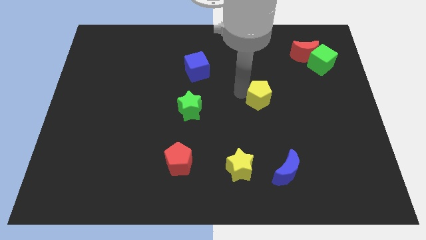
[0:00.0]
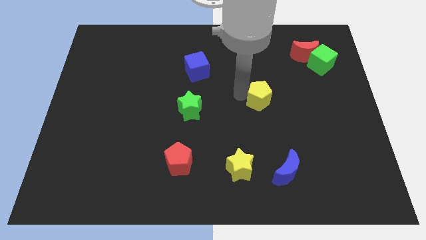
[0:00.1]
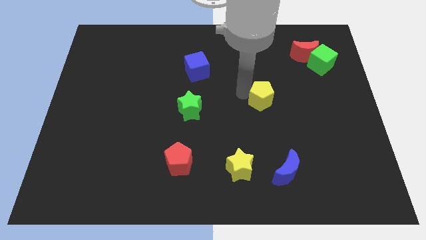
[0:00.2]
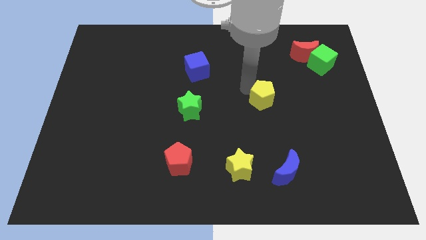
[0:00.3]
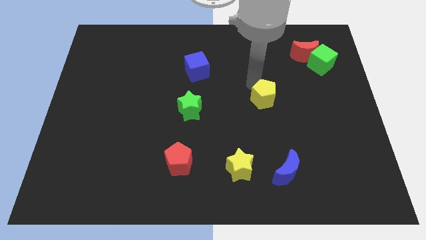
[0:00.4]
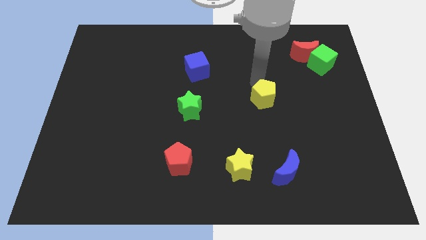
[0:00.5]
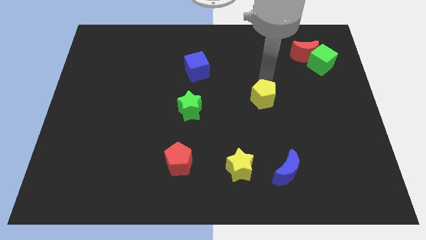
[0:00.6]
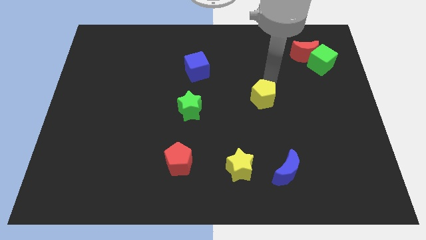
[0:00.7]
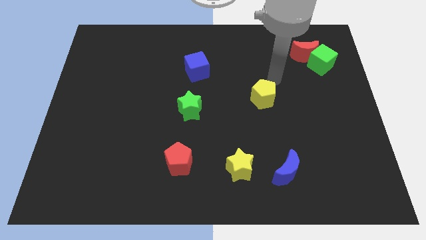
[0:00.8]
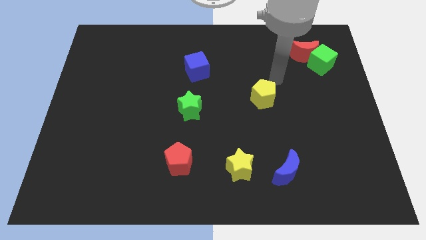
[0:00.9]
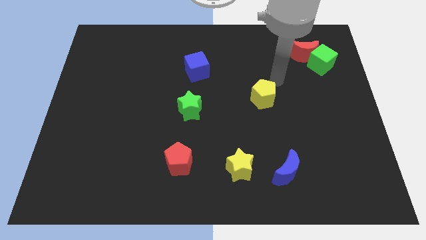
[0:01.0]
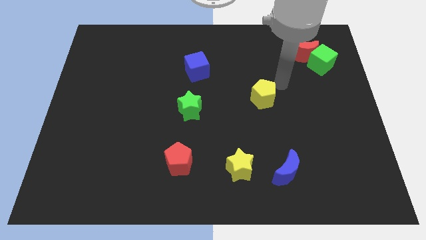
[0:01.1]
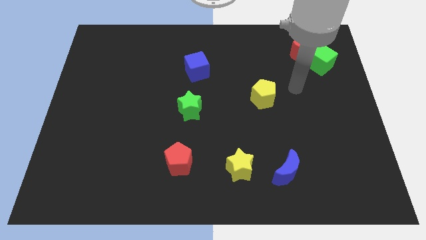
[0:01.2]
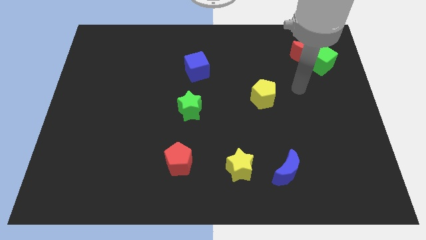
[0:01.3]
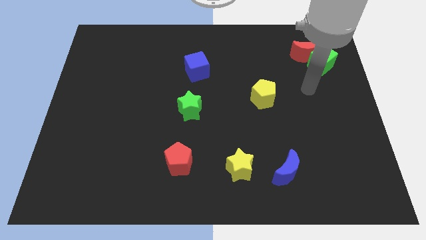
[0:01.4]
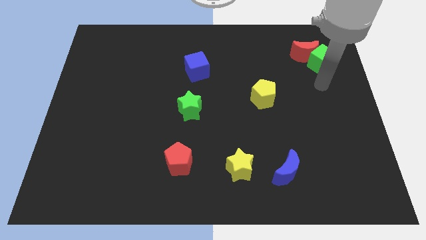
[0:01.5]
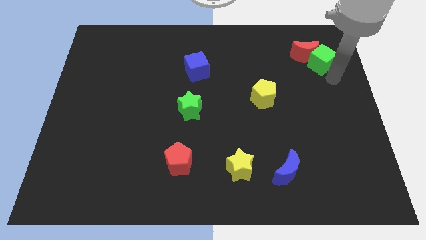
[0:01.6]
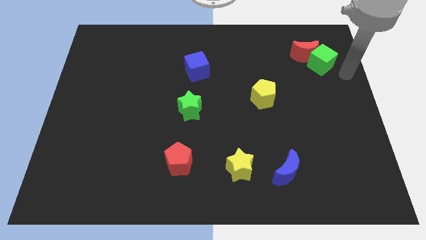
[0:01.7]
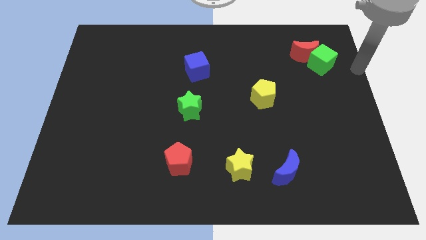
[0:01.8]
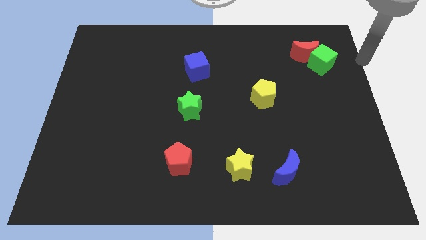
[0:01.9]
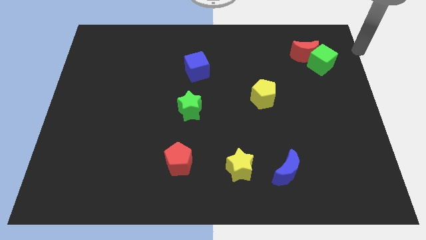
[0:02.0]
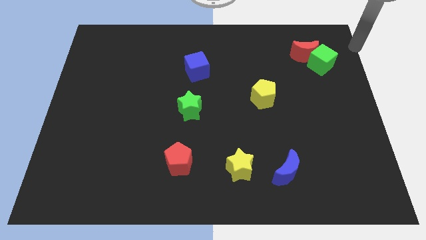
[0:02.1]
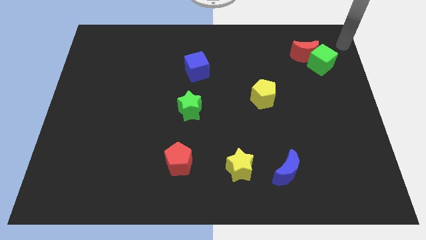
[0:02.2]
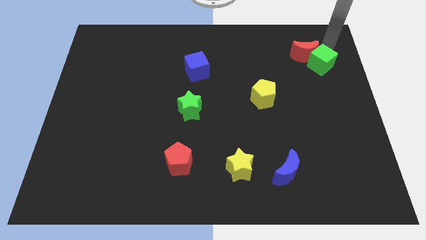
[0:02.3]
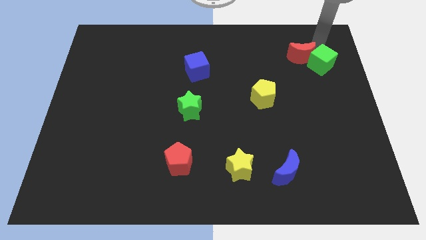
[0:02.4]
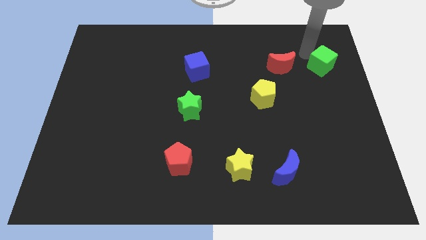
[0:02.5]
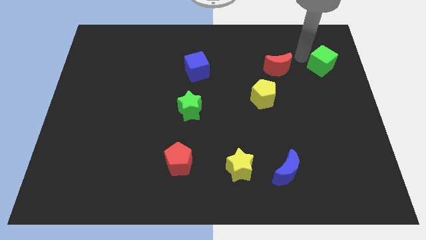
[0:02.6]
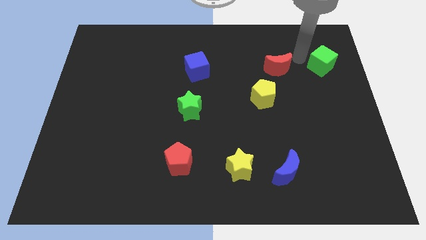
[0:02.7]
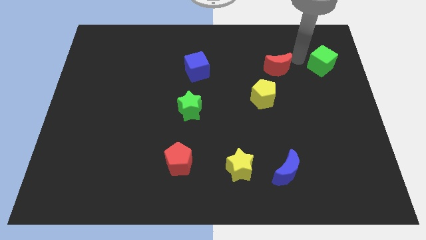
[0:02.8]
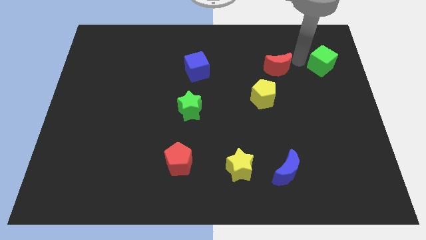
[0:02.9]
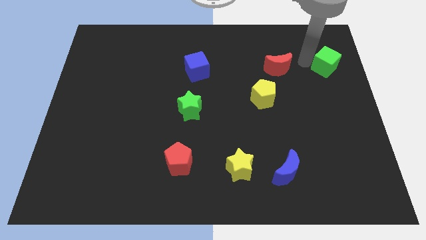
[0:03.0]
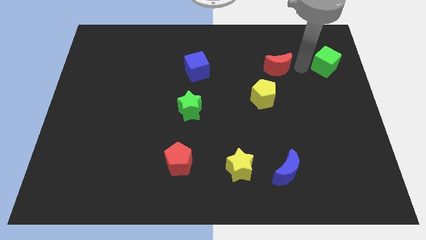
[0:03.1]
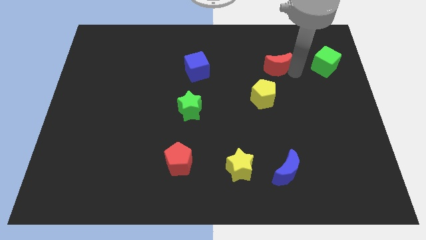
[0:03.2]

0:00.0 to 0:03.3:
move the red moon to the left of the green cube

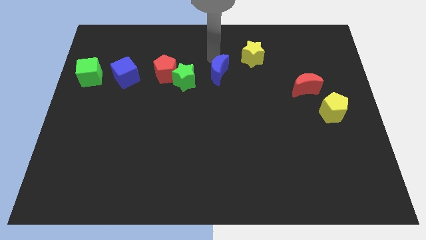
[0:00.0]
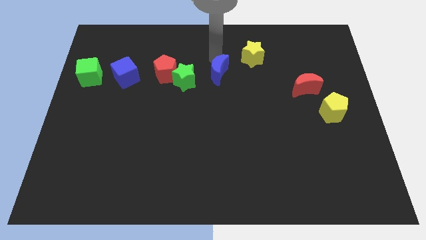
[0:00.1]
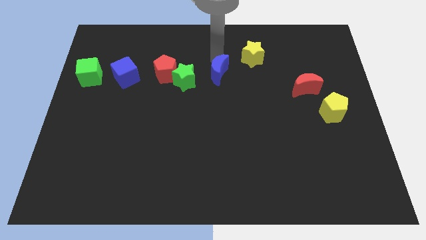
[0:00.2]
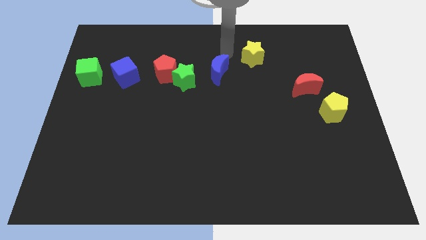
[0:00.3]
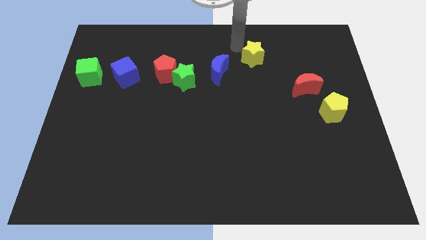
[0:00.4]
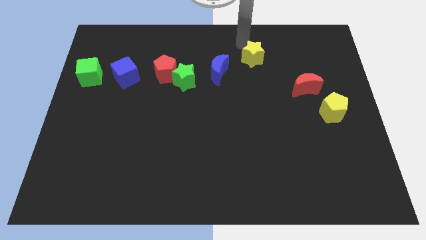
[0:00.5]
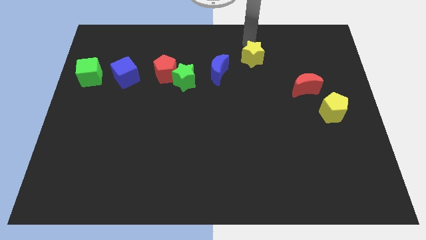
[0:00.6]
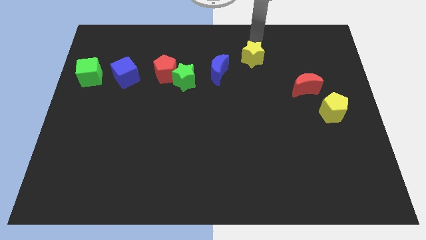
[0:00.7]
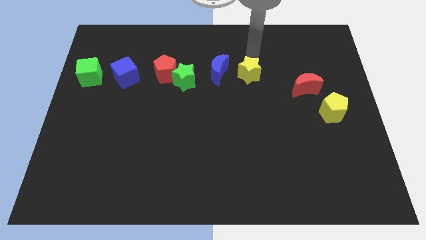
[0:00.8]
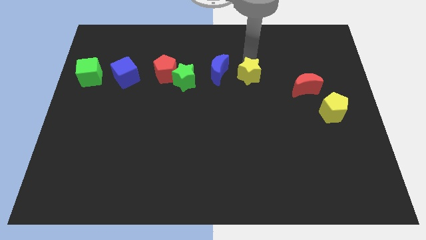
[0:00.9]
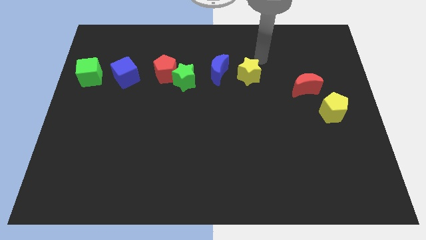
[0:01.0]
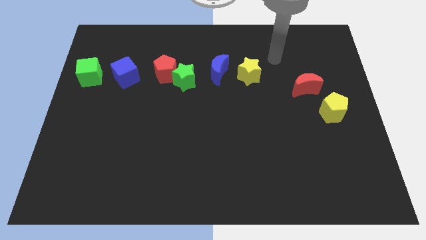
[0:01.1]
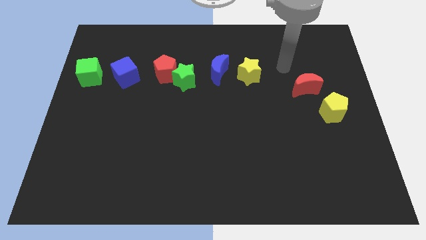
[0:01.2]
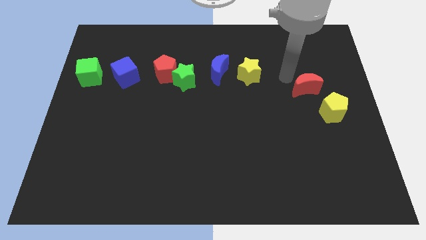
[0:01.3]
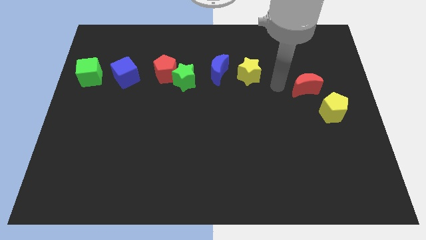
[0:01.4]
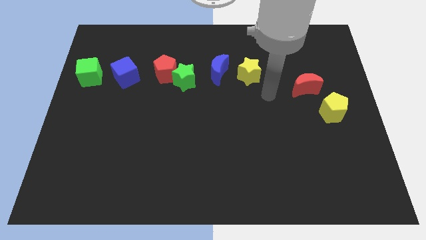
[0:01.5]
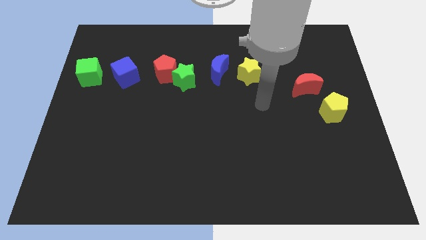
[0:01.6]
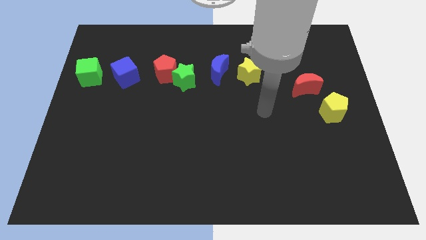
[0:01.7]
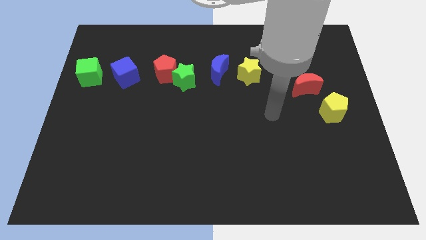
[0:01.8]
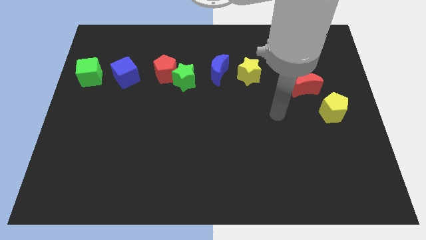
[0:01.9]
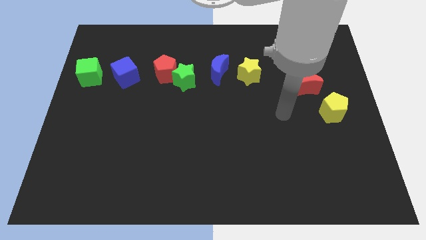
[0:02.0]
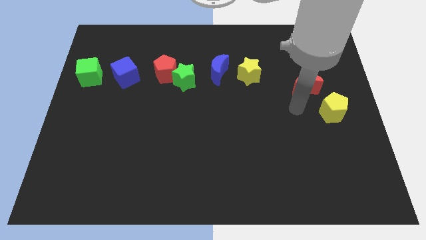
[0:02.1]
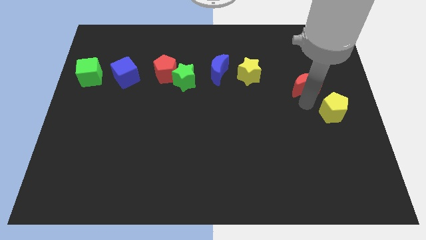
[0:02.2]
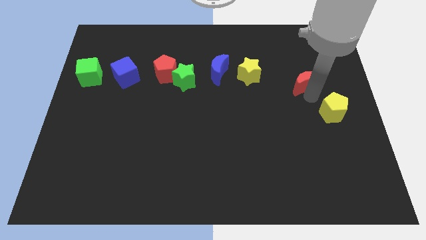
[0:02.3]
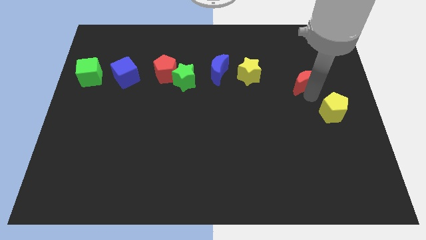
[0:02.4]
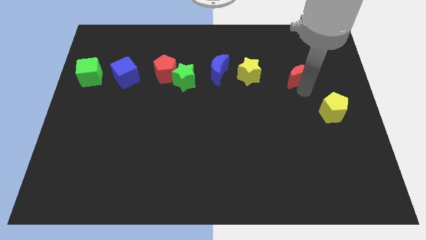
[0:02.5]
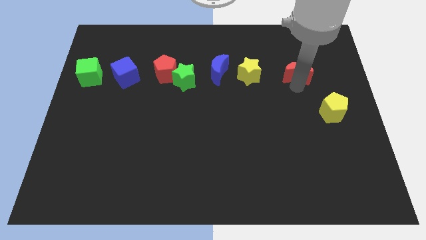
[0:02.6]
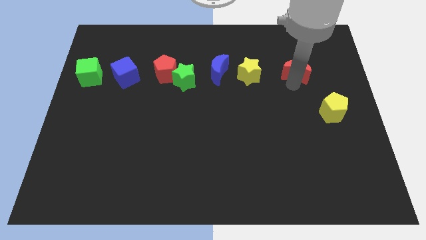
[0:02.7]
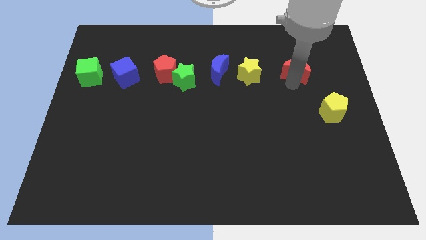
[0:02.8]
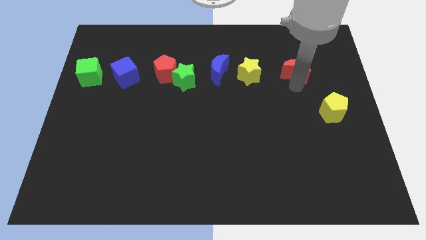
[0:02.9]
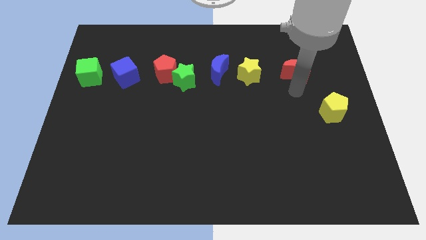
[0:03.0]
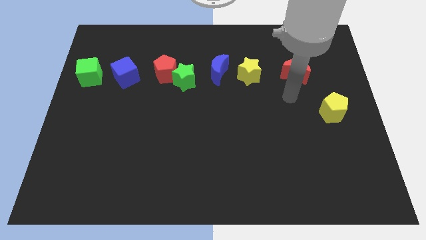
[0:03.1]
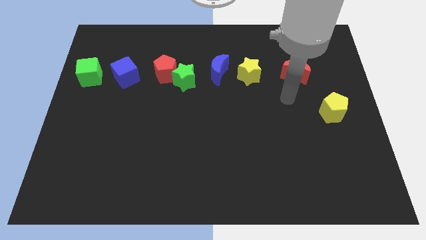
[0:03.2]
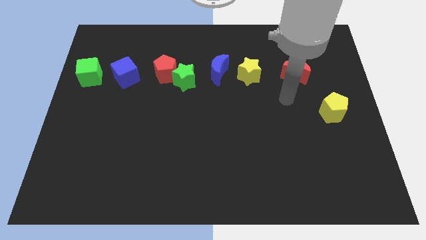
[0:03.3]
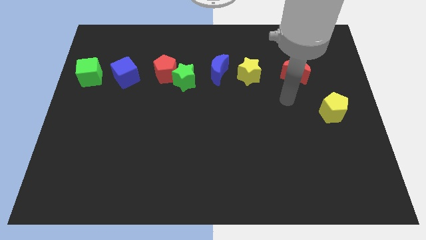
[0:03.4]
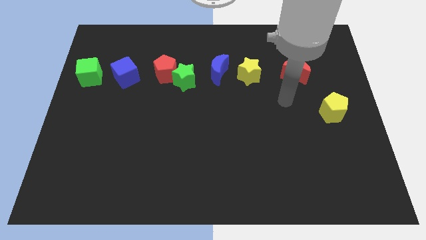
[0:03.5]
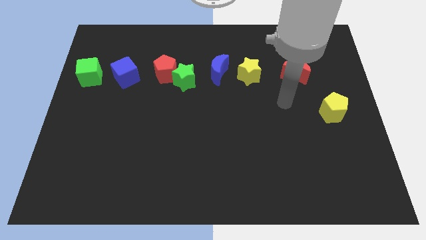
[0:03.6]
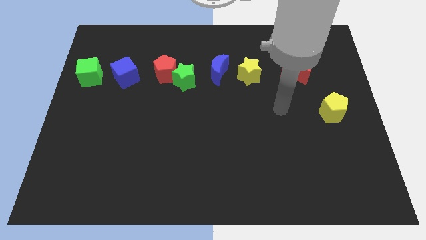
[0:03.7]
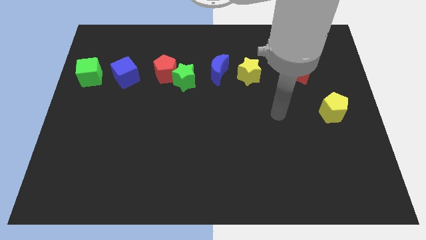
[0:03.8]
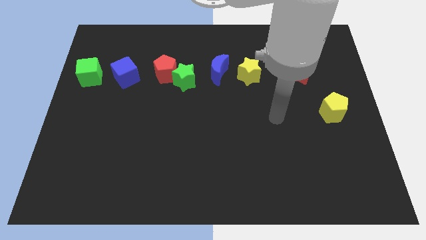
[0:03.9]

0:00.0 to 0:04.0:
move the red crescent to the right of the yellow star

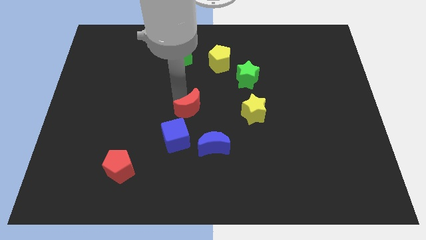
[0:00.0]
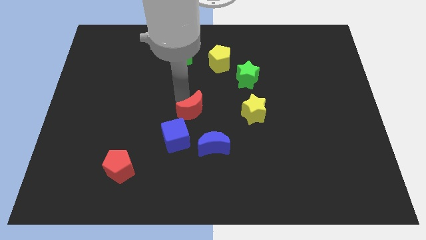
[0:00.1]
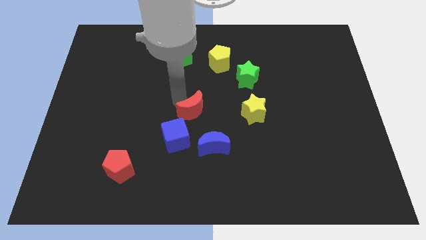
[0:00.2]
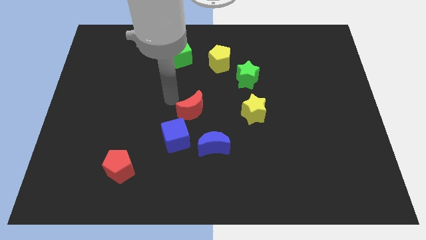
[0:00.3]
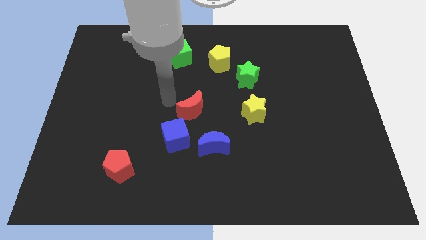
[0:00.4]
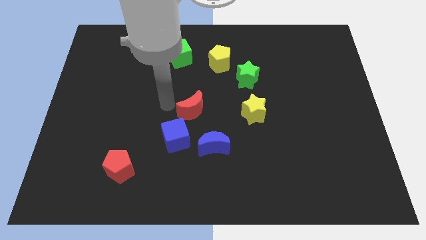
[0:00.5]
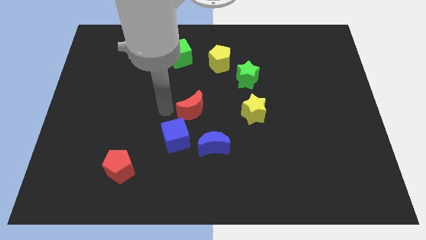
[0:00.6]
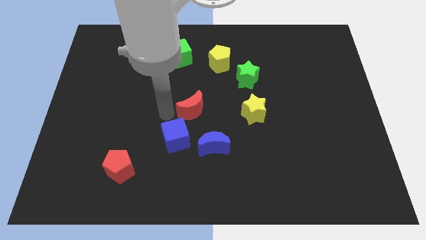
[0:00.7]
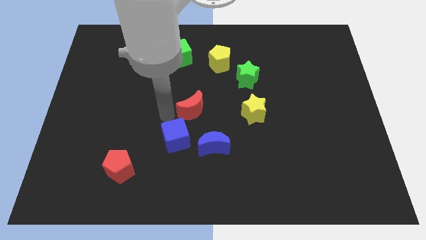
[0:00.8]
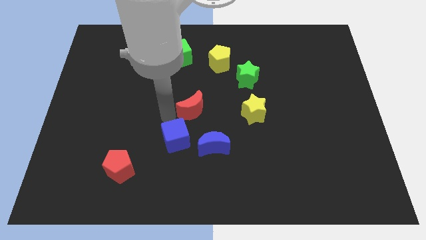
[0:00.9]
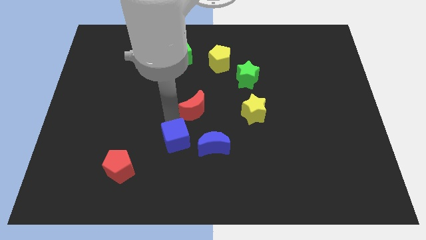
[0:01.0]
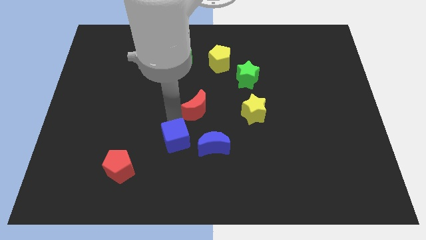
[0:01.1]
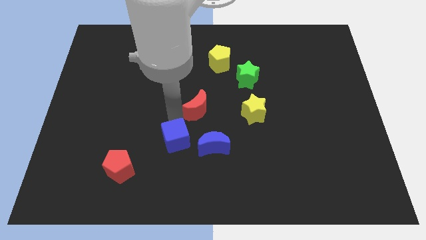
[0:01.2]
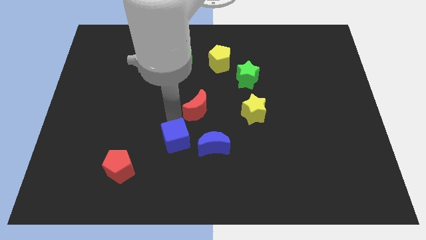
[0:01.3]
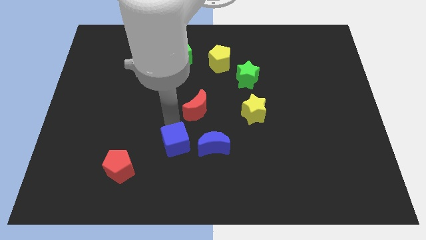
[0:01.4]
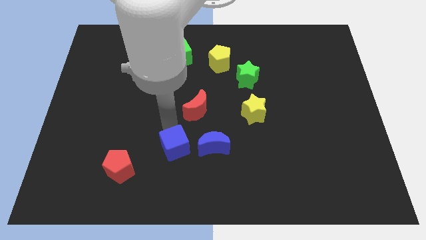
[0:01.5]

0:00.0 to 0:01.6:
move the blue cube horizontal to the left of the blue crescent

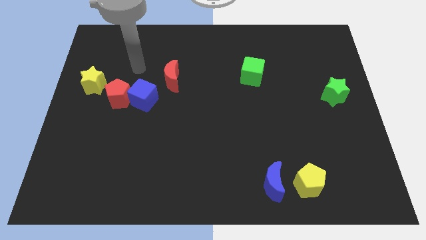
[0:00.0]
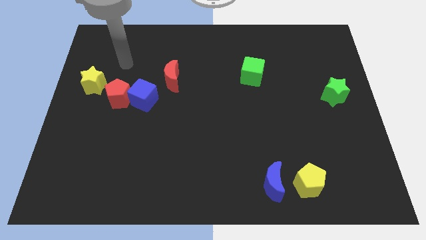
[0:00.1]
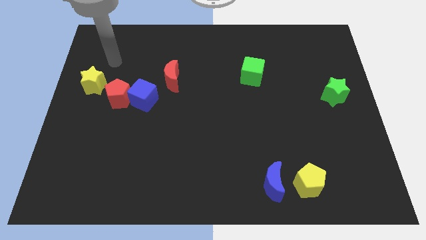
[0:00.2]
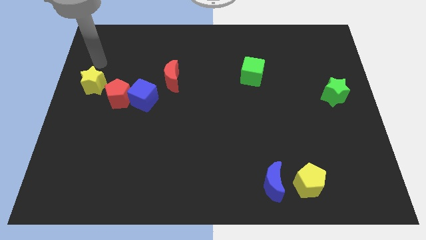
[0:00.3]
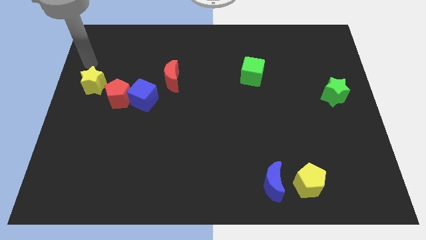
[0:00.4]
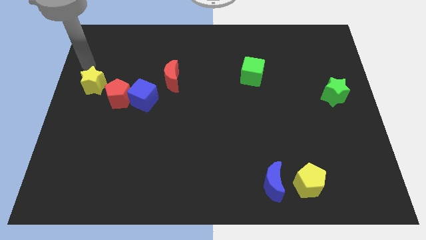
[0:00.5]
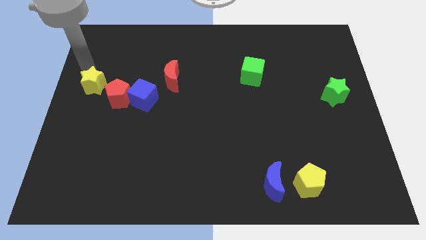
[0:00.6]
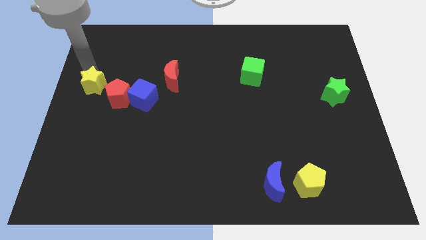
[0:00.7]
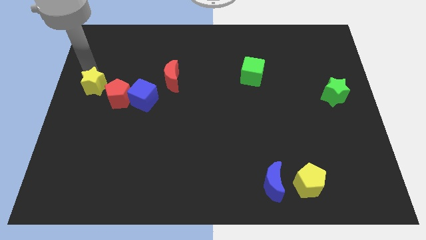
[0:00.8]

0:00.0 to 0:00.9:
move the arm above the yellow star
